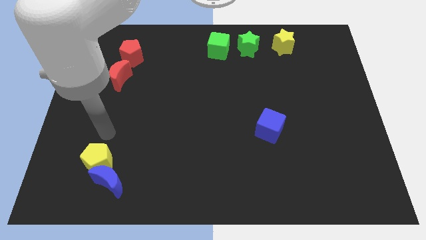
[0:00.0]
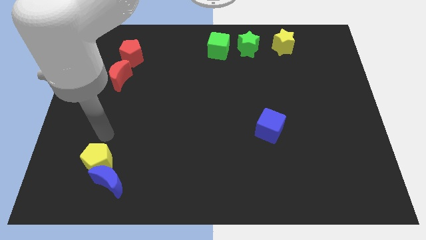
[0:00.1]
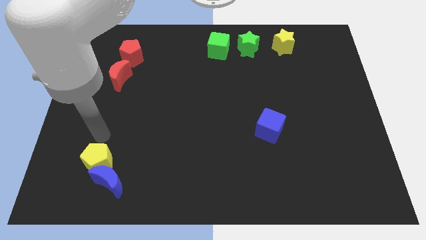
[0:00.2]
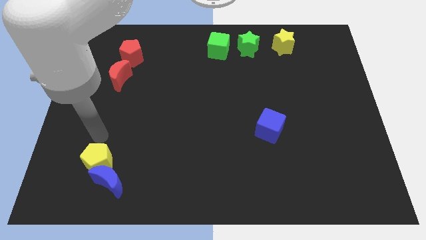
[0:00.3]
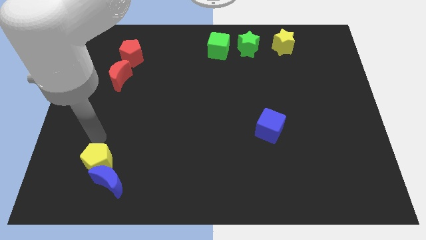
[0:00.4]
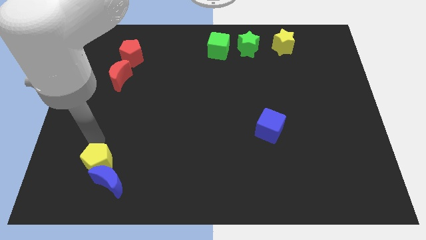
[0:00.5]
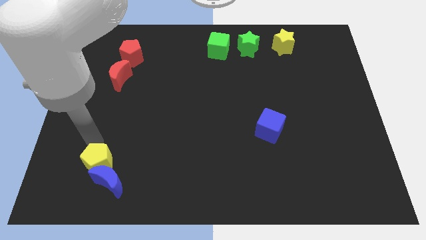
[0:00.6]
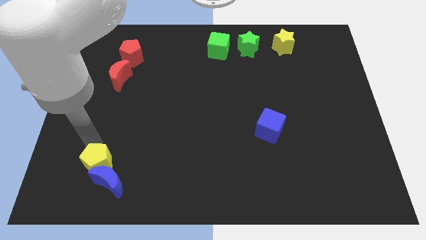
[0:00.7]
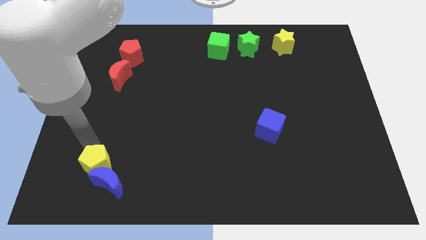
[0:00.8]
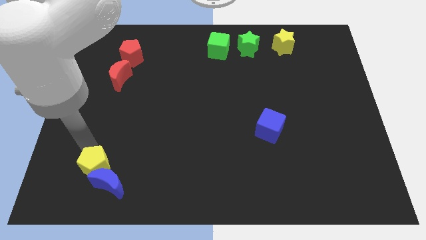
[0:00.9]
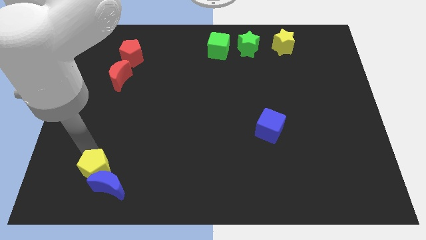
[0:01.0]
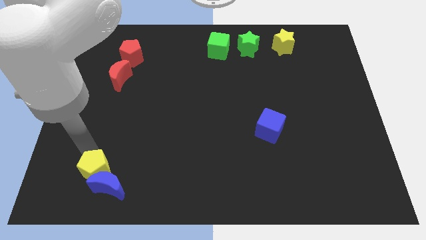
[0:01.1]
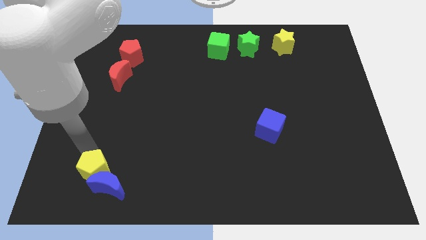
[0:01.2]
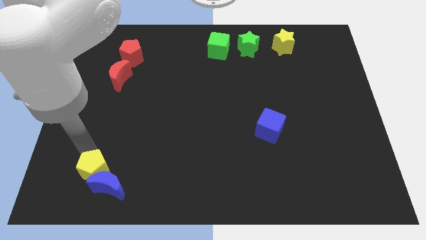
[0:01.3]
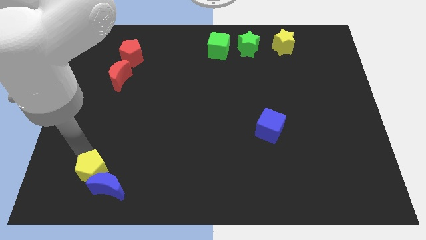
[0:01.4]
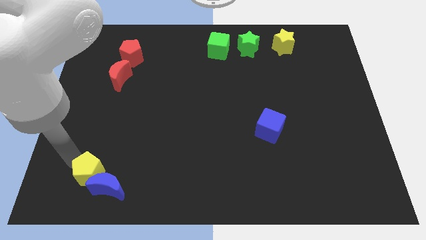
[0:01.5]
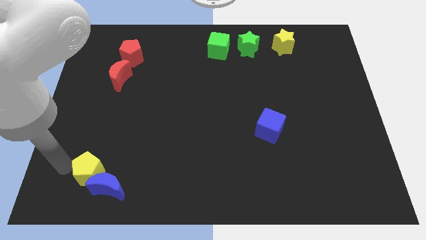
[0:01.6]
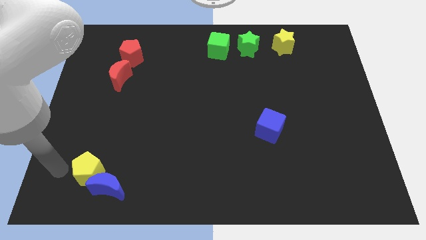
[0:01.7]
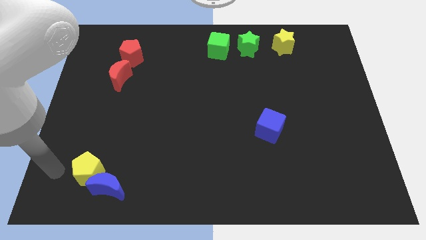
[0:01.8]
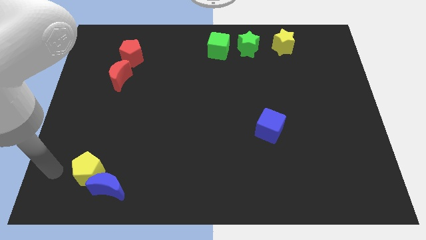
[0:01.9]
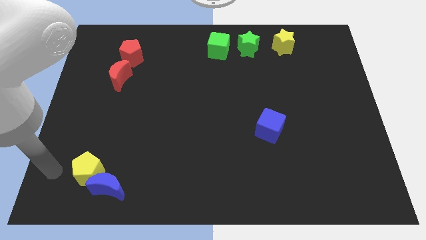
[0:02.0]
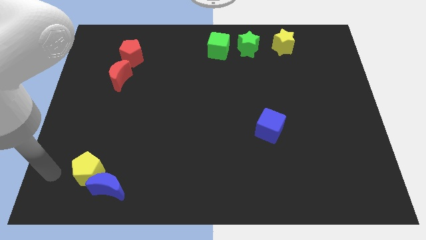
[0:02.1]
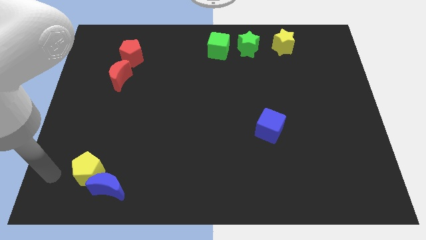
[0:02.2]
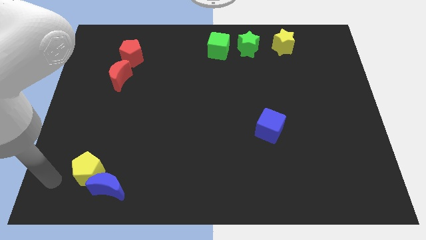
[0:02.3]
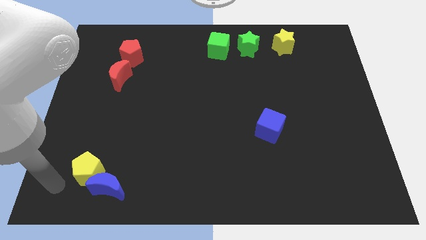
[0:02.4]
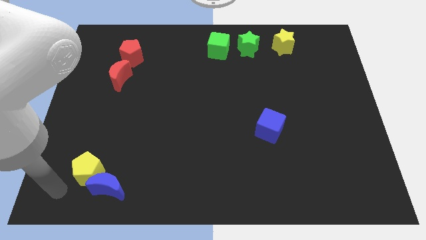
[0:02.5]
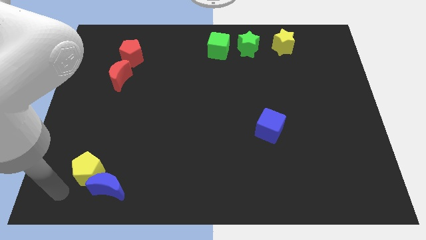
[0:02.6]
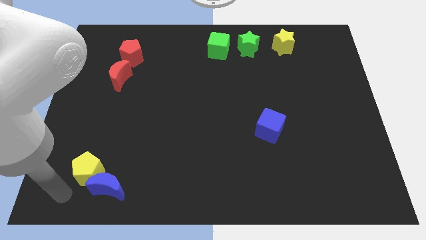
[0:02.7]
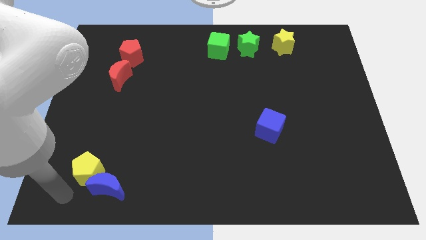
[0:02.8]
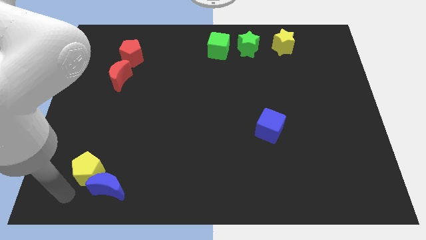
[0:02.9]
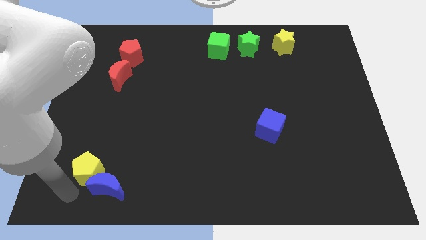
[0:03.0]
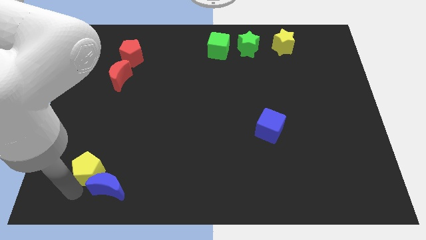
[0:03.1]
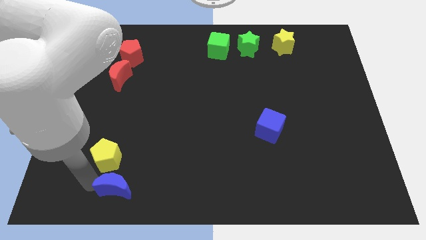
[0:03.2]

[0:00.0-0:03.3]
move the yellow pentagon slightly downwards

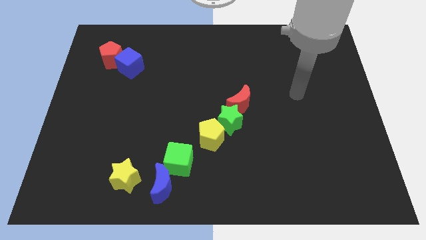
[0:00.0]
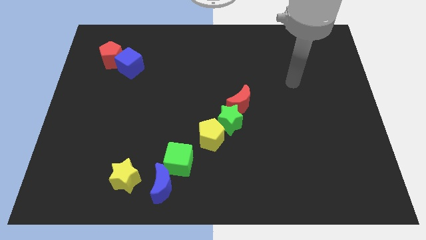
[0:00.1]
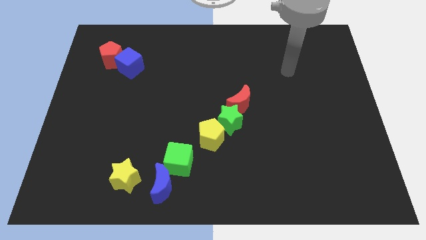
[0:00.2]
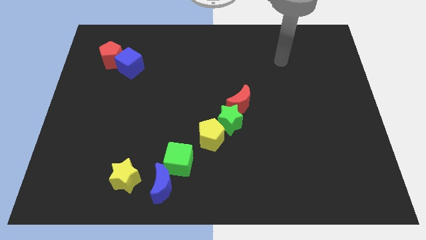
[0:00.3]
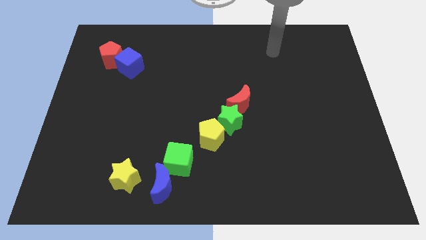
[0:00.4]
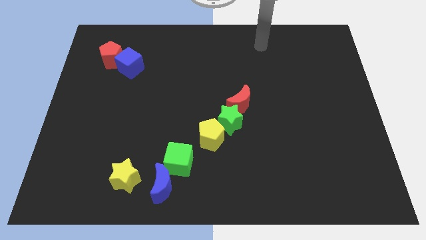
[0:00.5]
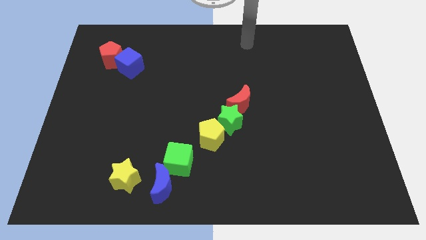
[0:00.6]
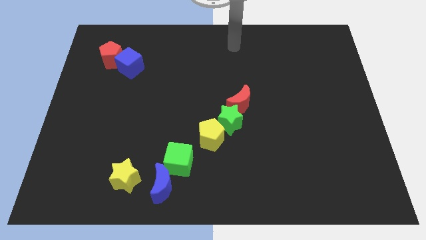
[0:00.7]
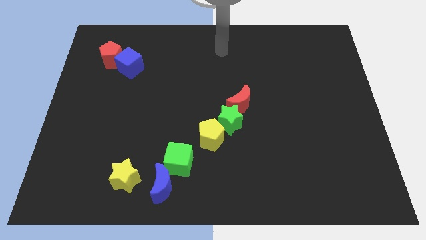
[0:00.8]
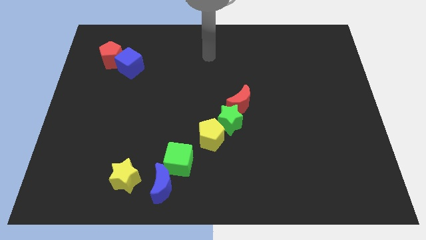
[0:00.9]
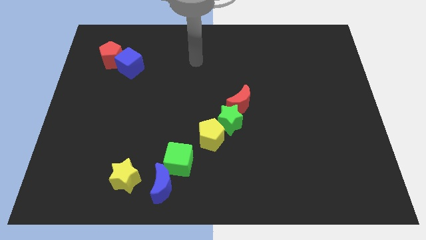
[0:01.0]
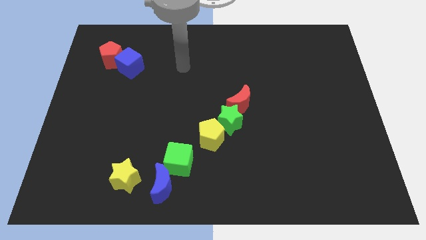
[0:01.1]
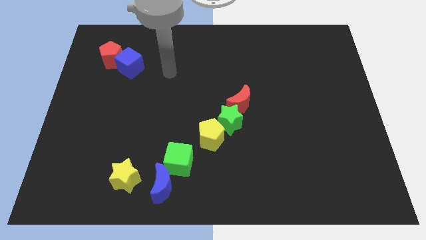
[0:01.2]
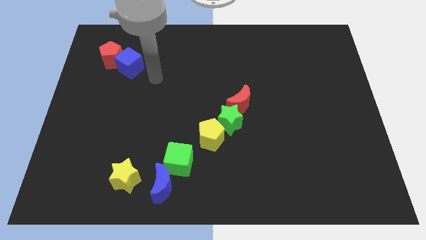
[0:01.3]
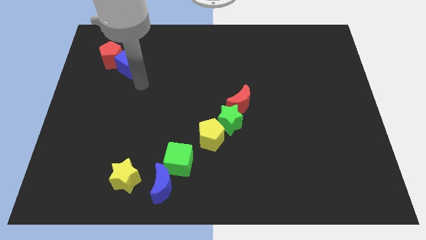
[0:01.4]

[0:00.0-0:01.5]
move yourself close to the blue cube

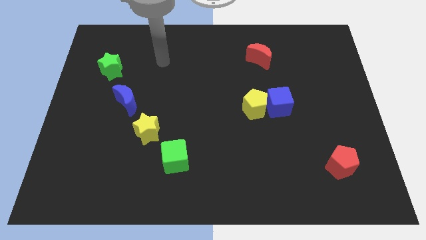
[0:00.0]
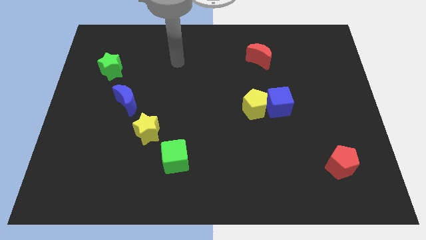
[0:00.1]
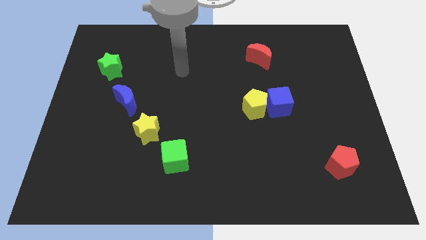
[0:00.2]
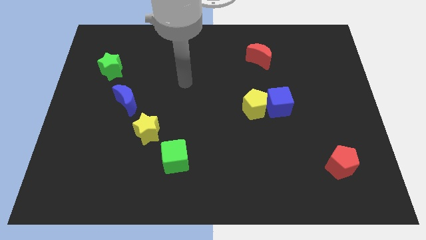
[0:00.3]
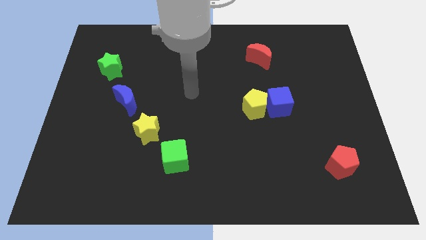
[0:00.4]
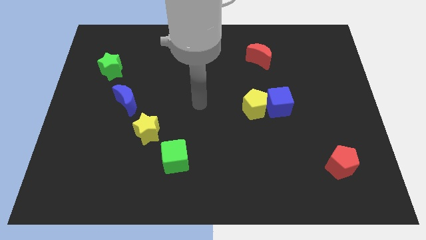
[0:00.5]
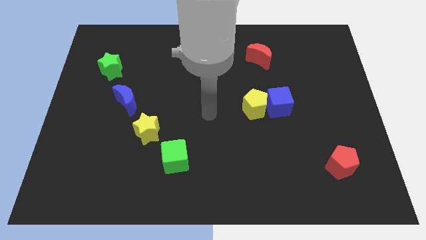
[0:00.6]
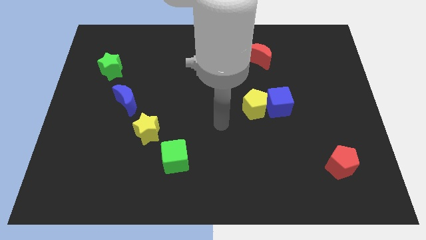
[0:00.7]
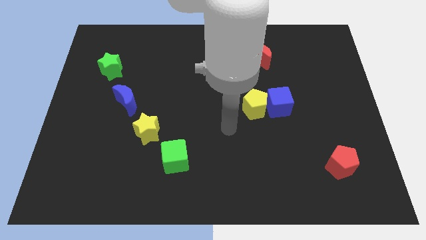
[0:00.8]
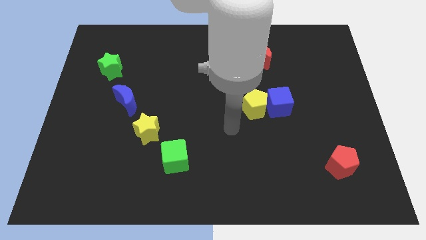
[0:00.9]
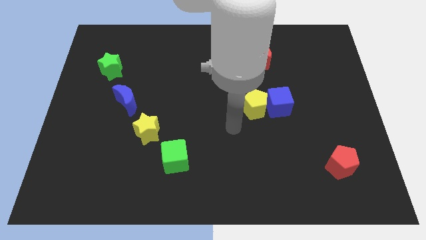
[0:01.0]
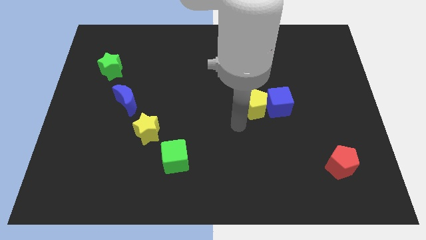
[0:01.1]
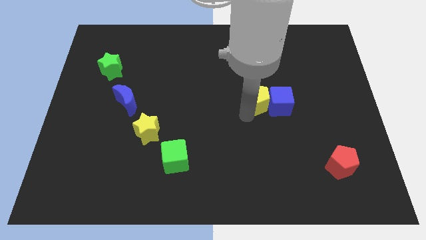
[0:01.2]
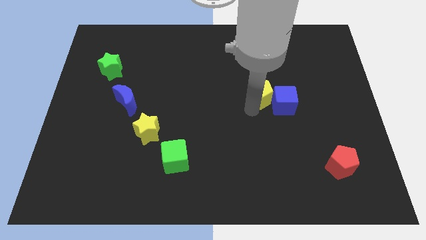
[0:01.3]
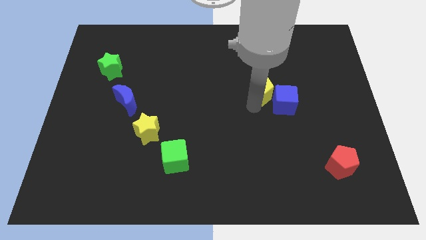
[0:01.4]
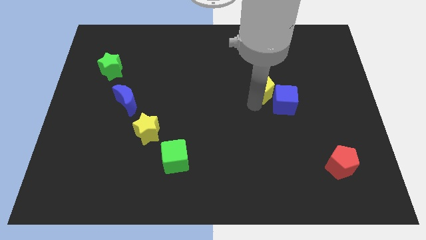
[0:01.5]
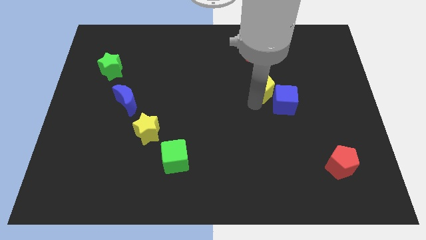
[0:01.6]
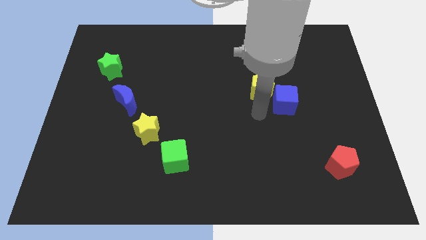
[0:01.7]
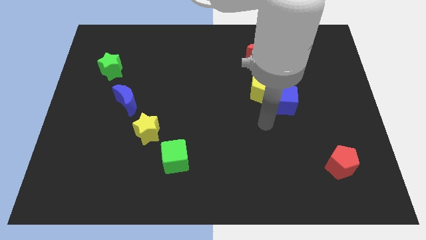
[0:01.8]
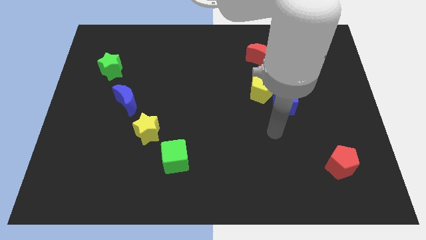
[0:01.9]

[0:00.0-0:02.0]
move the yellow pentagon slightly upwards

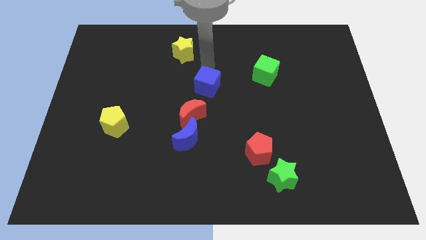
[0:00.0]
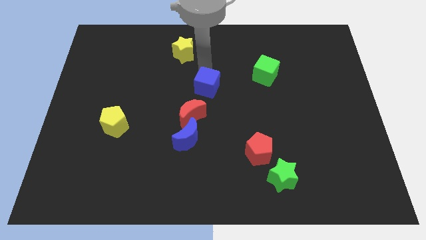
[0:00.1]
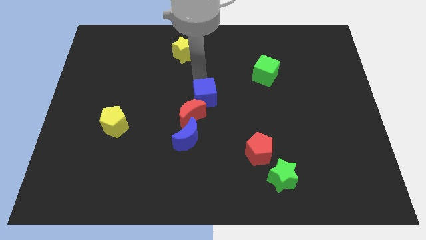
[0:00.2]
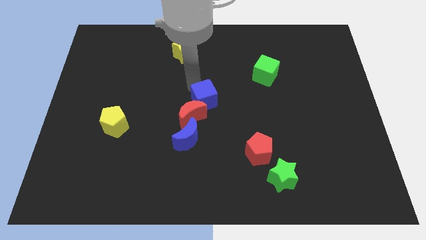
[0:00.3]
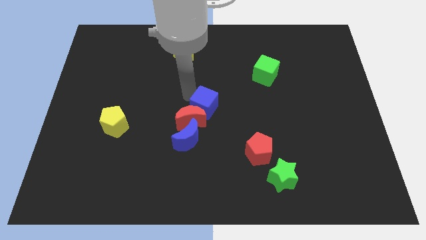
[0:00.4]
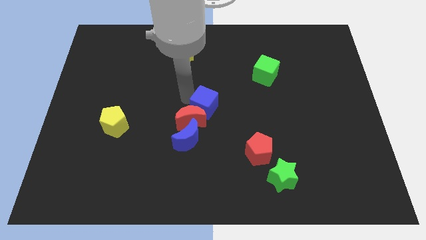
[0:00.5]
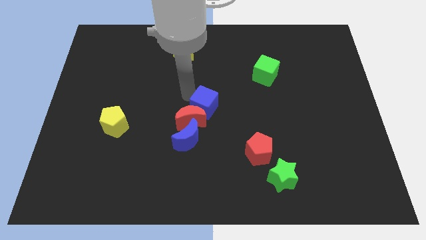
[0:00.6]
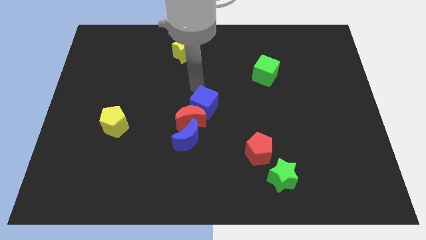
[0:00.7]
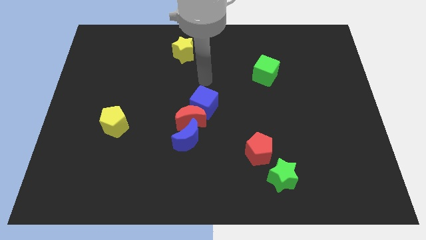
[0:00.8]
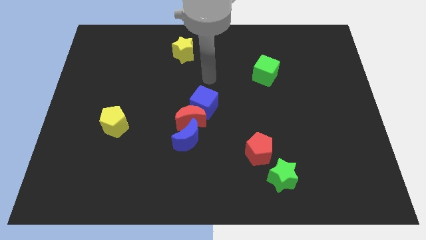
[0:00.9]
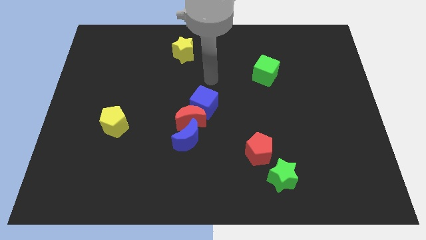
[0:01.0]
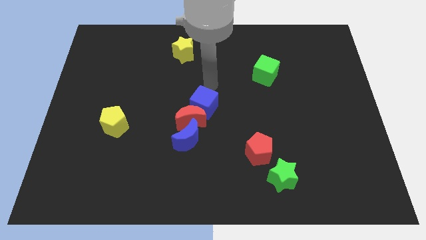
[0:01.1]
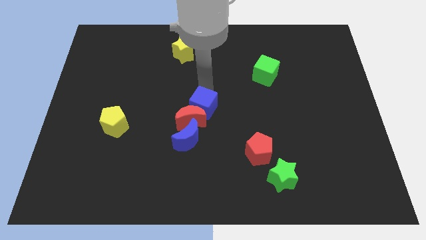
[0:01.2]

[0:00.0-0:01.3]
push the blue cube into group of blocks

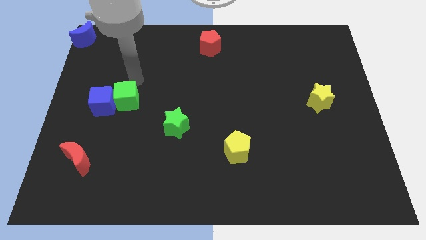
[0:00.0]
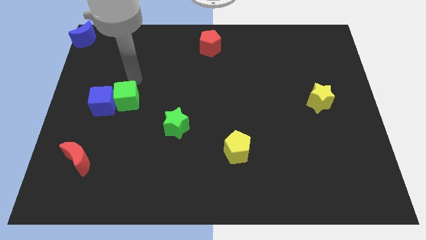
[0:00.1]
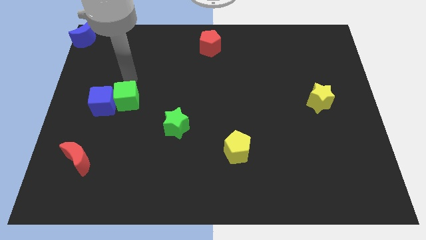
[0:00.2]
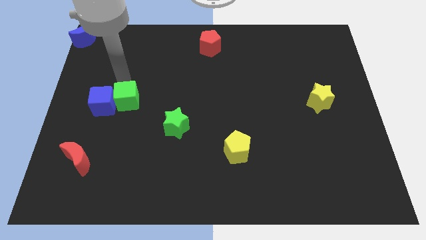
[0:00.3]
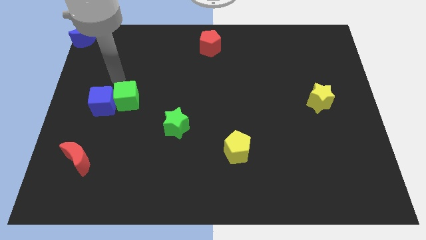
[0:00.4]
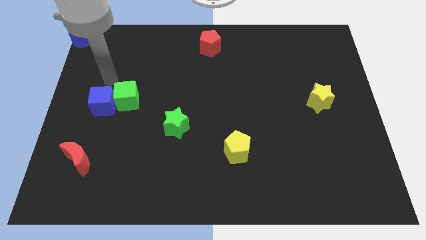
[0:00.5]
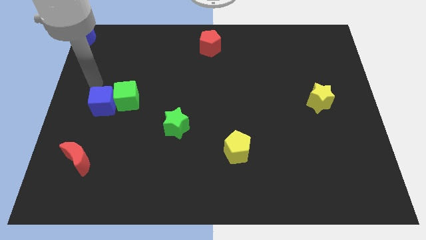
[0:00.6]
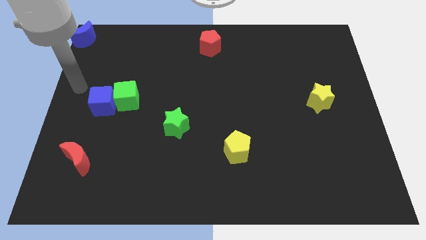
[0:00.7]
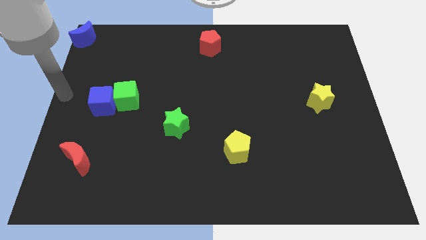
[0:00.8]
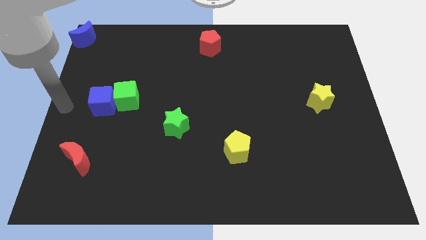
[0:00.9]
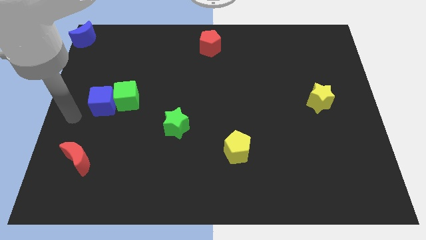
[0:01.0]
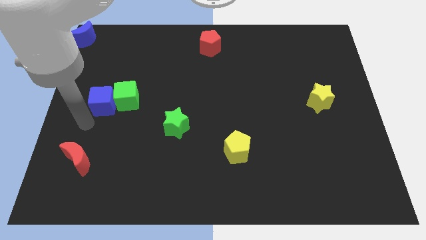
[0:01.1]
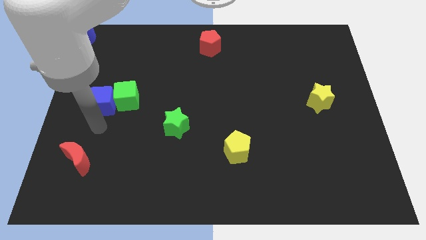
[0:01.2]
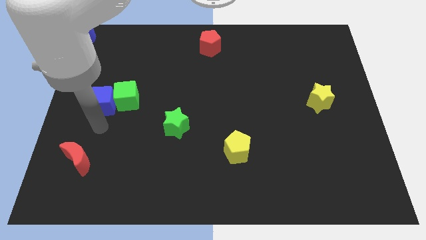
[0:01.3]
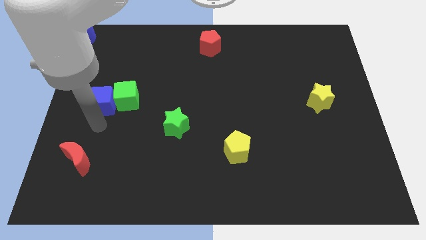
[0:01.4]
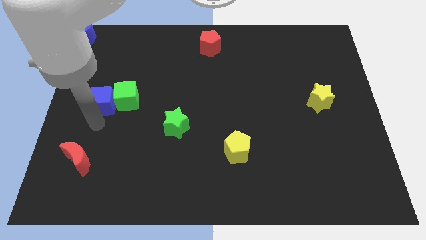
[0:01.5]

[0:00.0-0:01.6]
place your arm to the bottom of the blue cube
